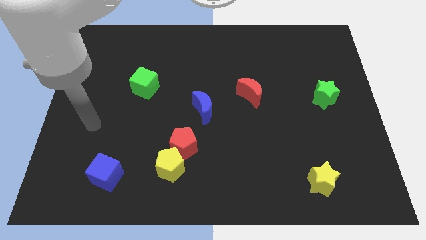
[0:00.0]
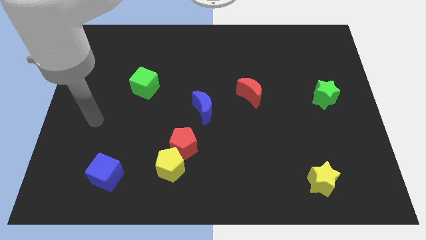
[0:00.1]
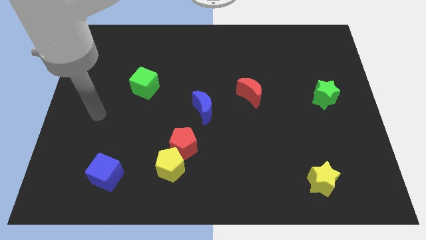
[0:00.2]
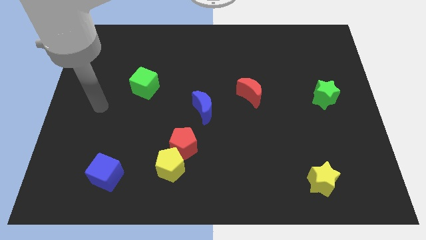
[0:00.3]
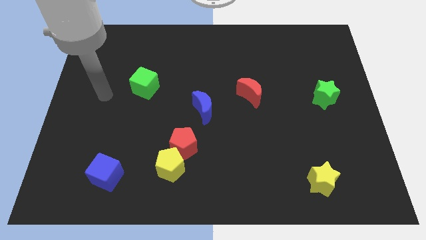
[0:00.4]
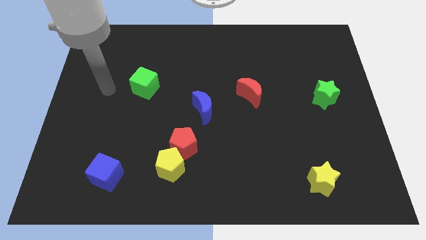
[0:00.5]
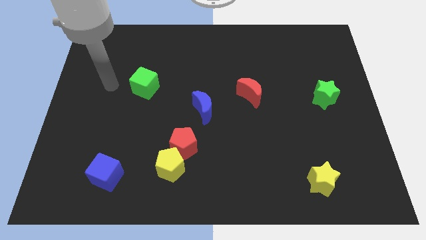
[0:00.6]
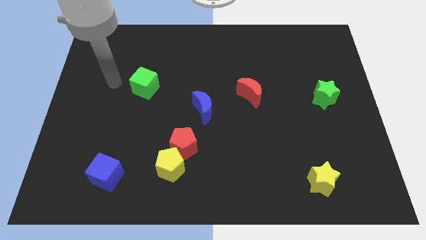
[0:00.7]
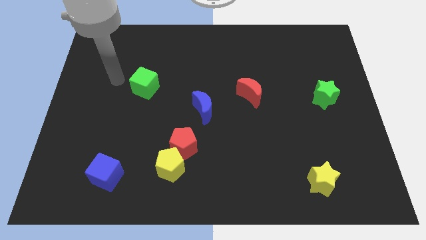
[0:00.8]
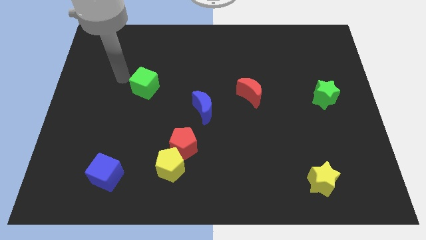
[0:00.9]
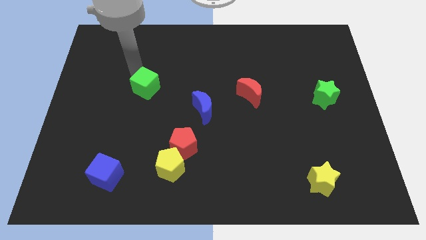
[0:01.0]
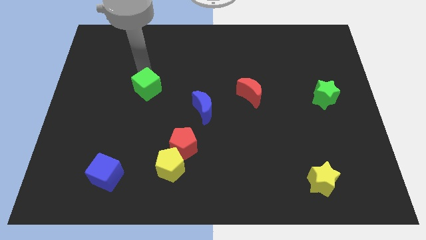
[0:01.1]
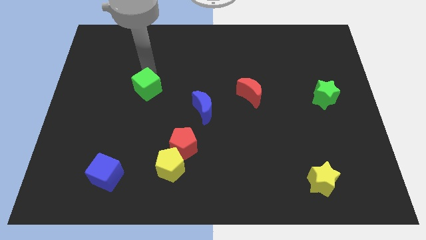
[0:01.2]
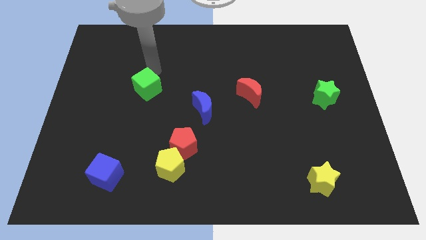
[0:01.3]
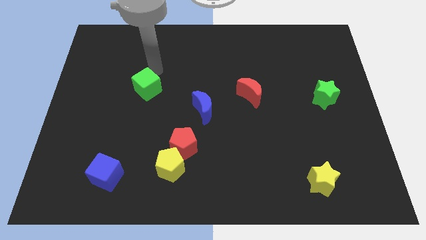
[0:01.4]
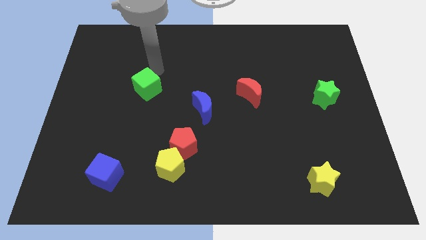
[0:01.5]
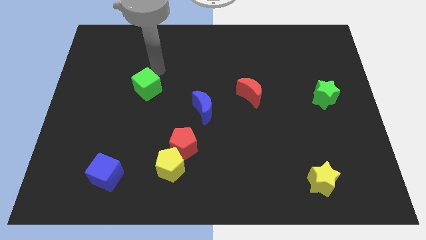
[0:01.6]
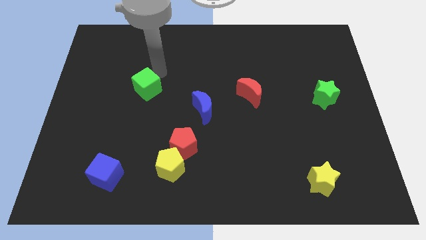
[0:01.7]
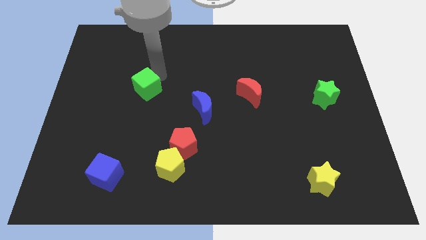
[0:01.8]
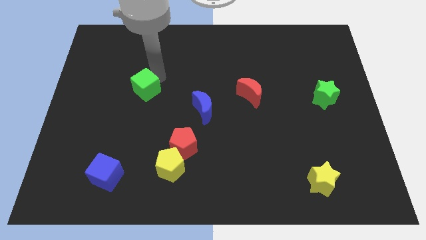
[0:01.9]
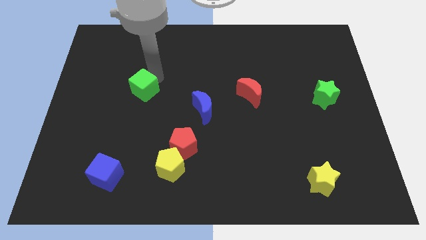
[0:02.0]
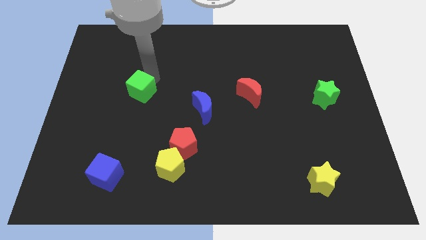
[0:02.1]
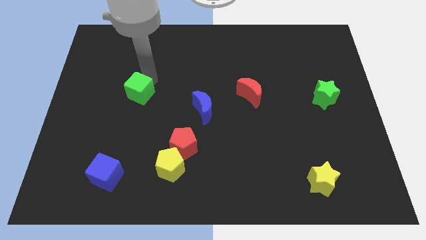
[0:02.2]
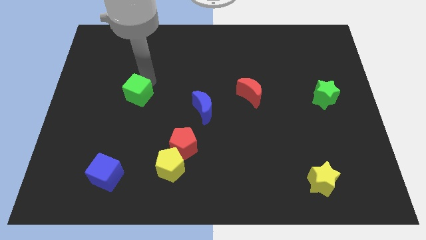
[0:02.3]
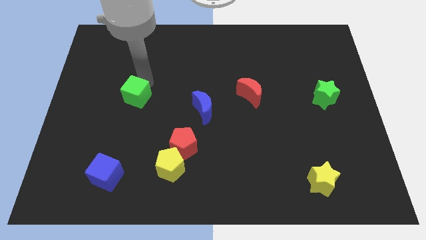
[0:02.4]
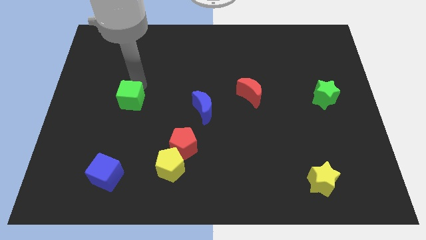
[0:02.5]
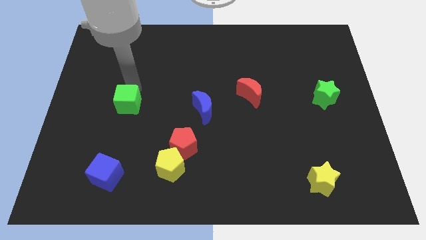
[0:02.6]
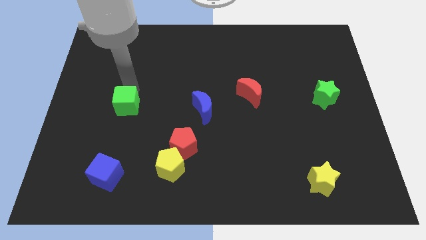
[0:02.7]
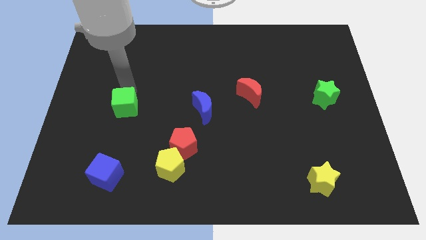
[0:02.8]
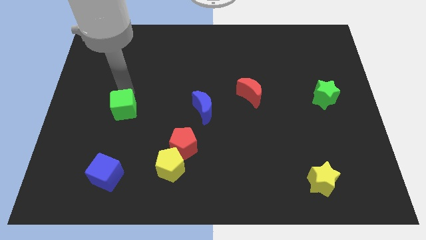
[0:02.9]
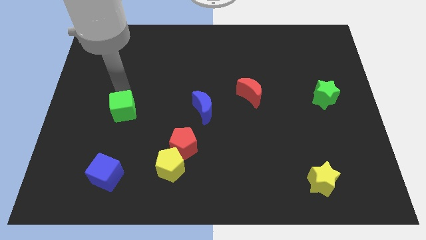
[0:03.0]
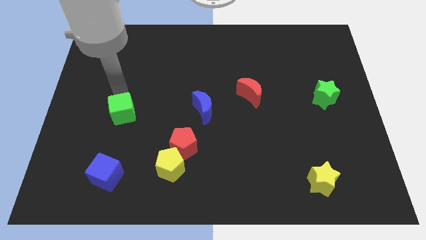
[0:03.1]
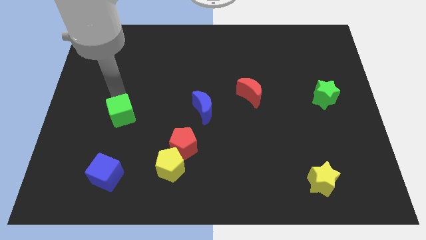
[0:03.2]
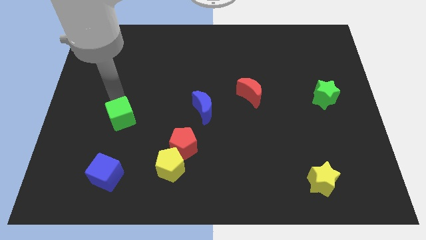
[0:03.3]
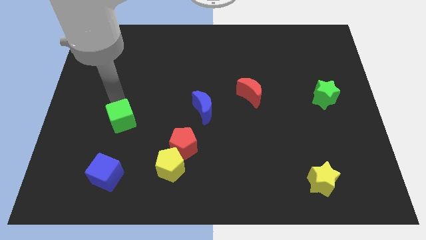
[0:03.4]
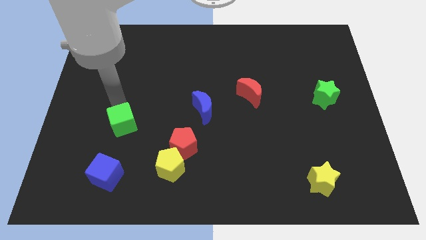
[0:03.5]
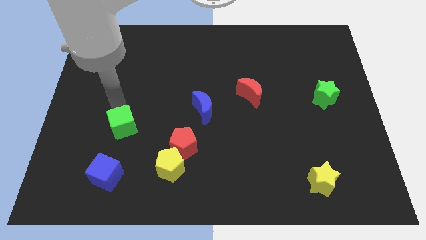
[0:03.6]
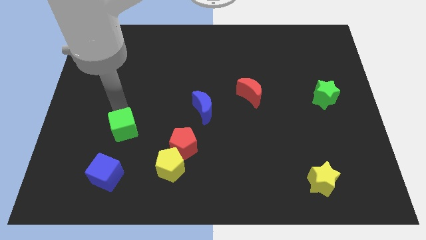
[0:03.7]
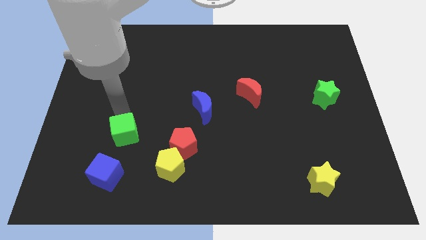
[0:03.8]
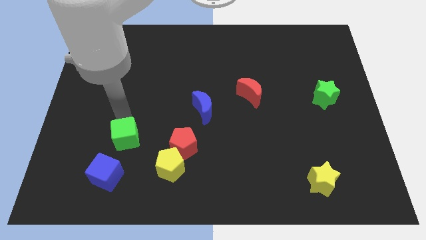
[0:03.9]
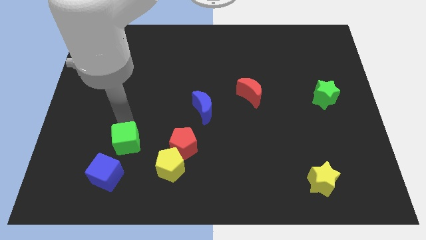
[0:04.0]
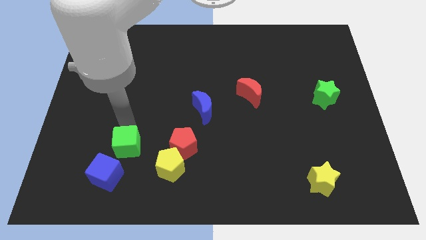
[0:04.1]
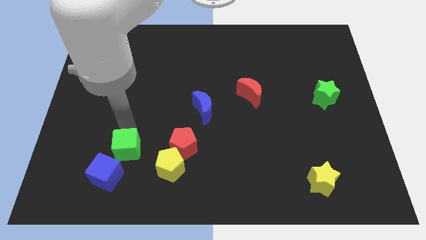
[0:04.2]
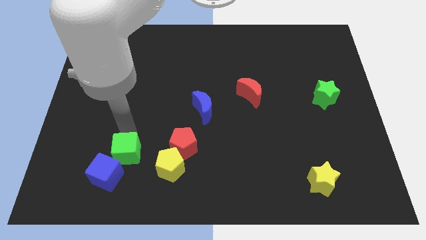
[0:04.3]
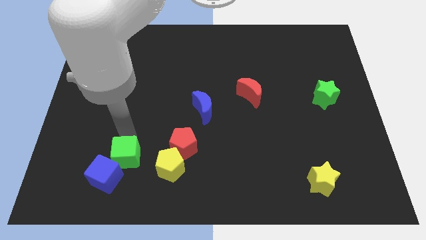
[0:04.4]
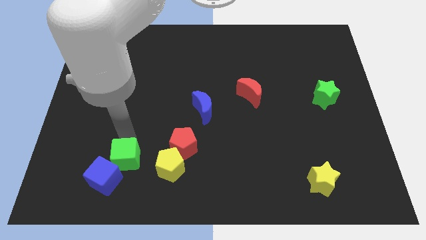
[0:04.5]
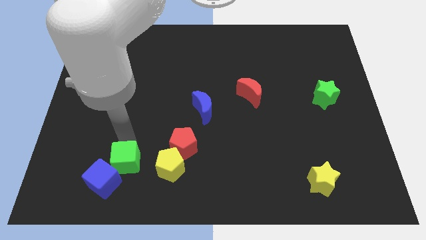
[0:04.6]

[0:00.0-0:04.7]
push the green cube close to the blue cube

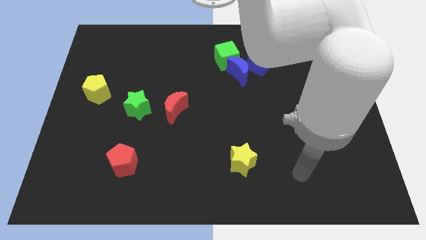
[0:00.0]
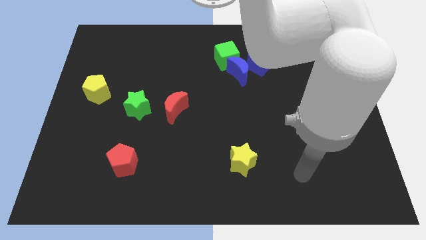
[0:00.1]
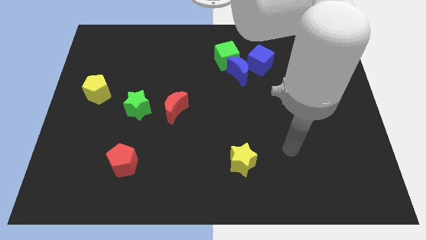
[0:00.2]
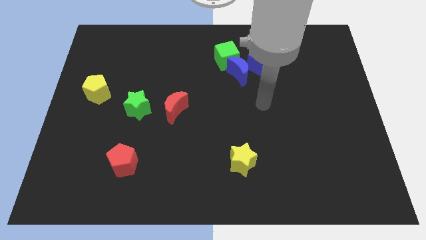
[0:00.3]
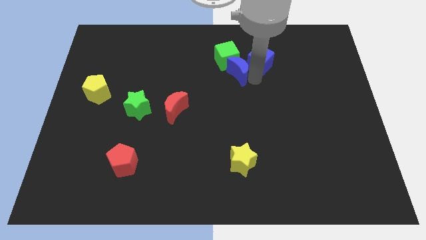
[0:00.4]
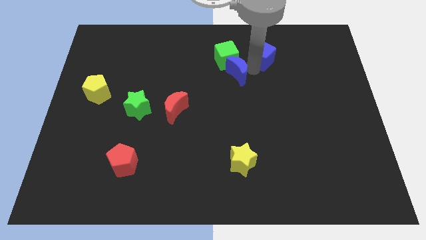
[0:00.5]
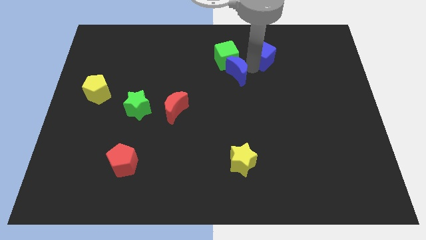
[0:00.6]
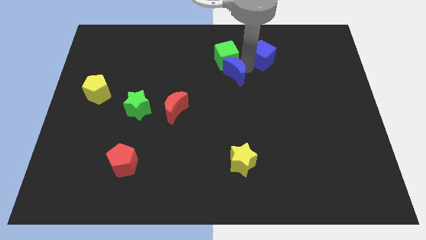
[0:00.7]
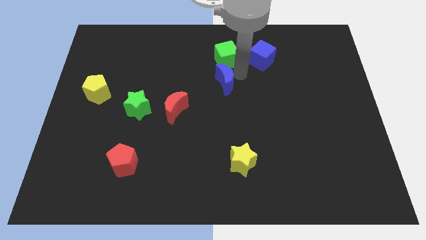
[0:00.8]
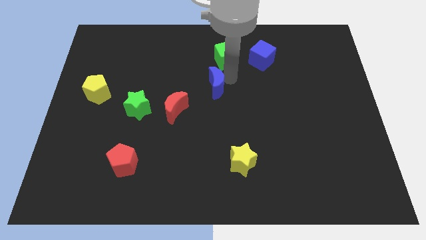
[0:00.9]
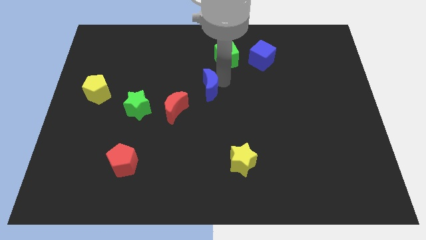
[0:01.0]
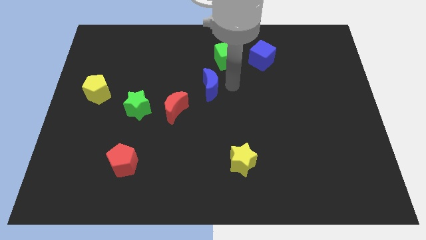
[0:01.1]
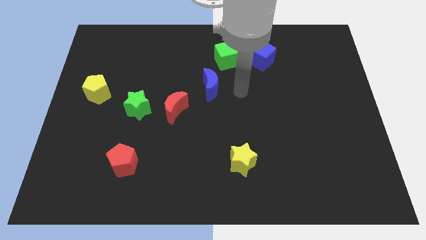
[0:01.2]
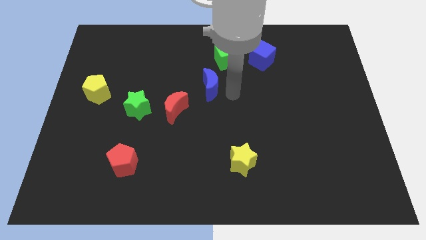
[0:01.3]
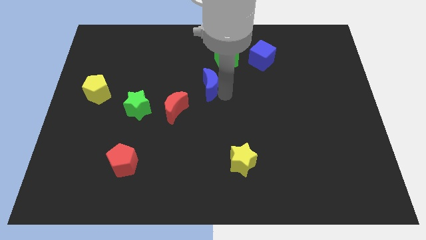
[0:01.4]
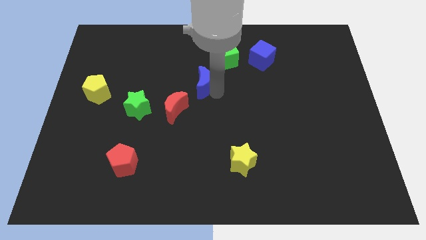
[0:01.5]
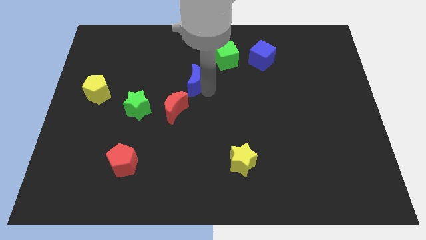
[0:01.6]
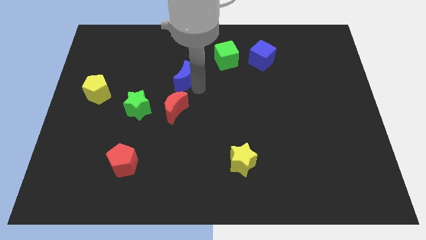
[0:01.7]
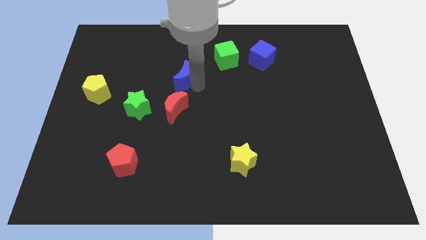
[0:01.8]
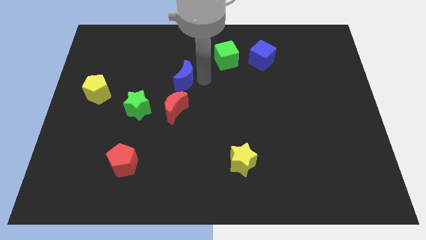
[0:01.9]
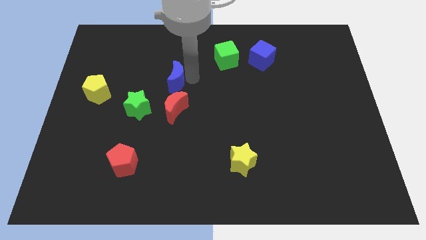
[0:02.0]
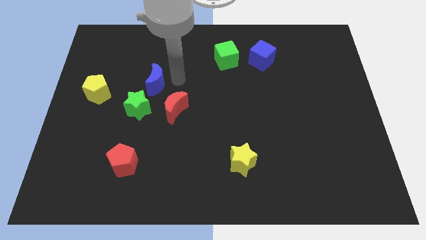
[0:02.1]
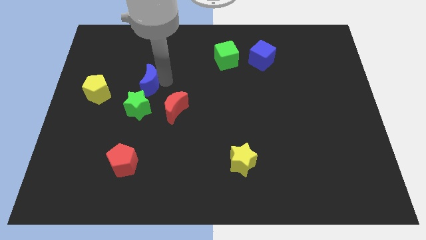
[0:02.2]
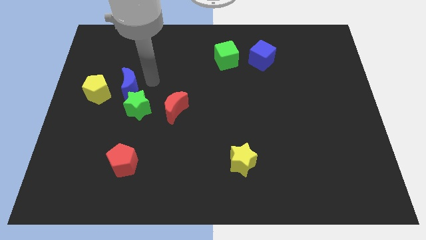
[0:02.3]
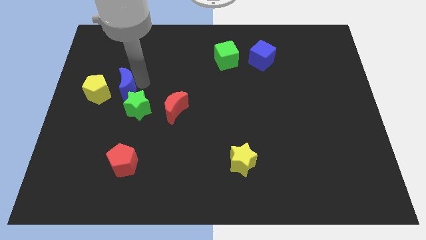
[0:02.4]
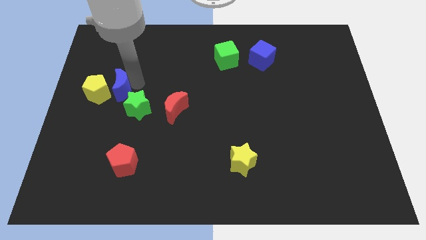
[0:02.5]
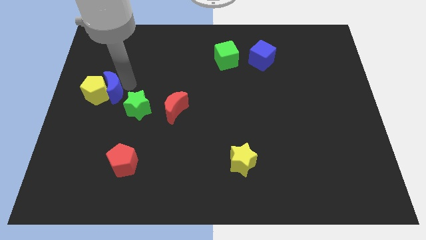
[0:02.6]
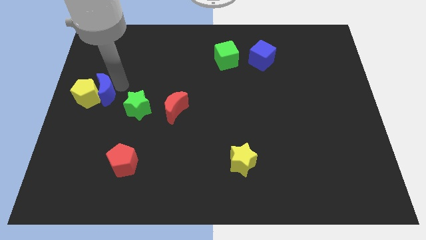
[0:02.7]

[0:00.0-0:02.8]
slide the blue moon to the yellow pentagon

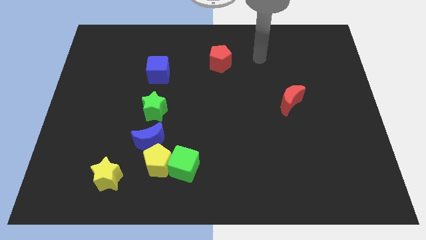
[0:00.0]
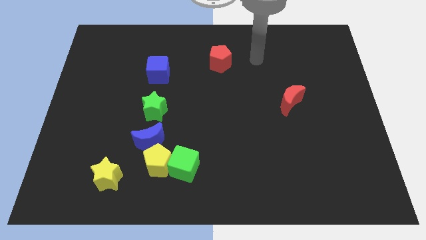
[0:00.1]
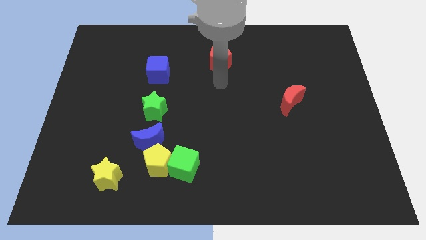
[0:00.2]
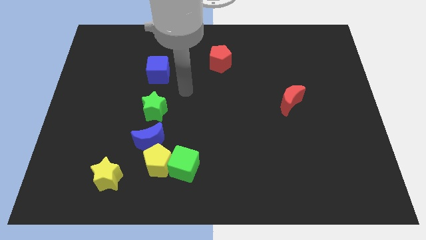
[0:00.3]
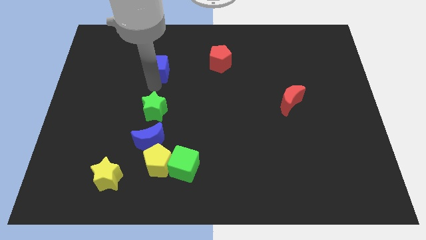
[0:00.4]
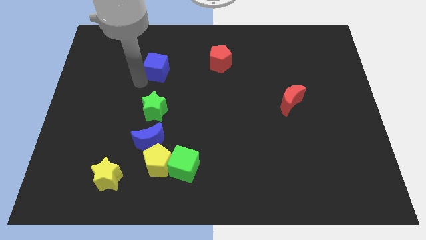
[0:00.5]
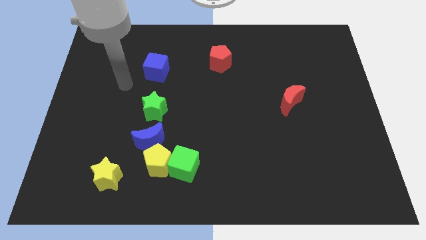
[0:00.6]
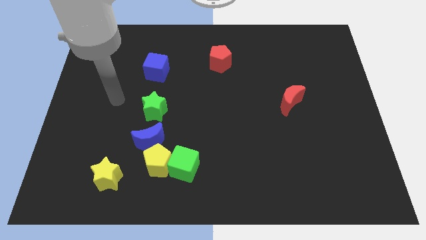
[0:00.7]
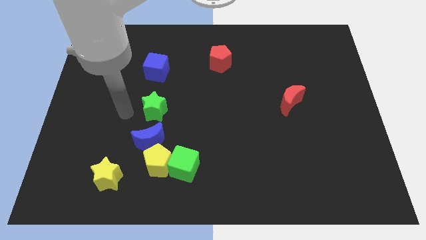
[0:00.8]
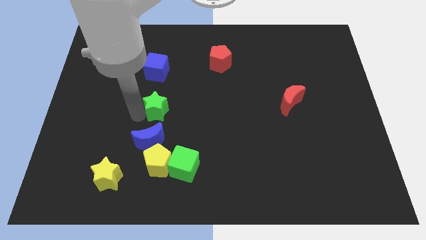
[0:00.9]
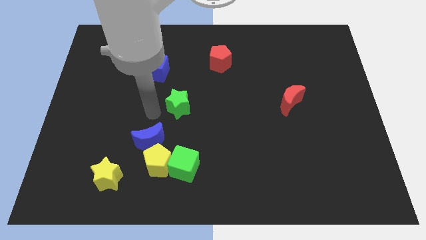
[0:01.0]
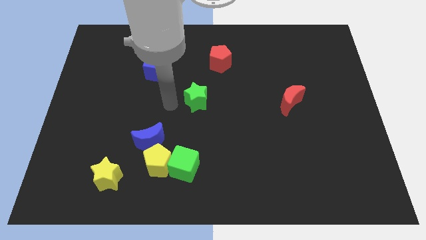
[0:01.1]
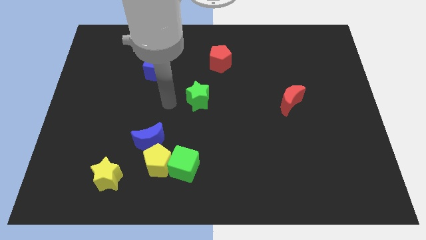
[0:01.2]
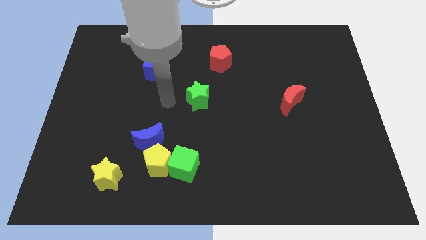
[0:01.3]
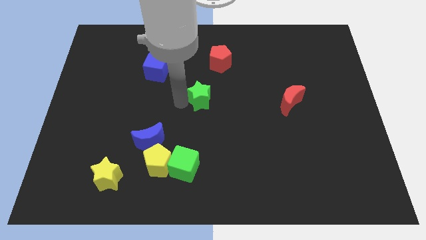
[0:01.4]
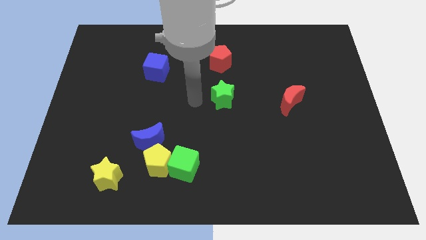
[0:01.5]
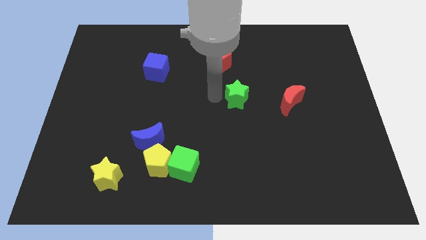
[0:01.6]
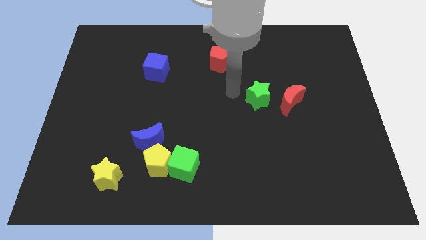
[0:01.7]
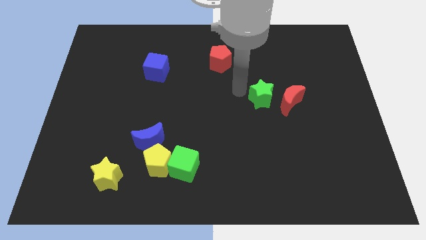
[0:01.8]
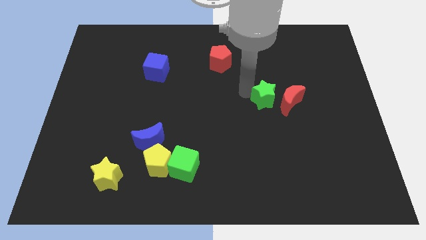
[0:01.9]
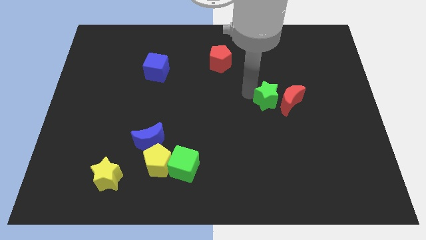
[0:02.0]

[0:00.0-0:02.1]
put the green star to the red moon
